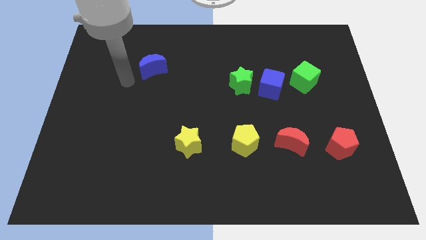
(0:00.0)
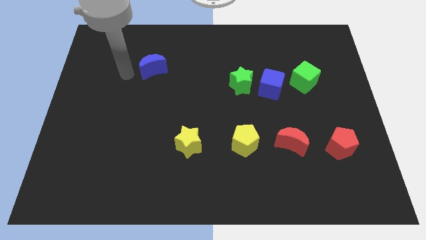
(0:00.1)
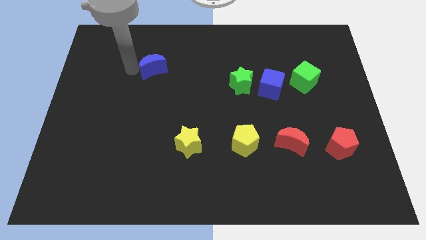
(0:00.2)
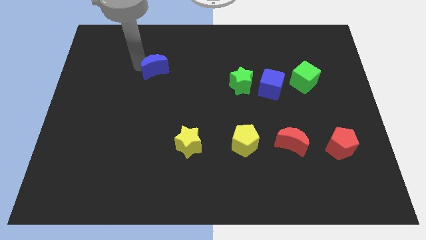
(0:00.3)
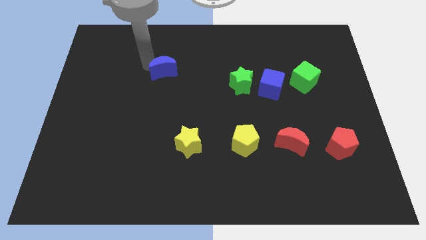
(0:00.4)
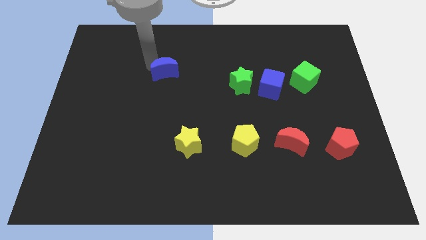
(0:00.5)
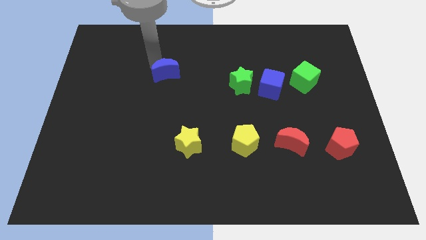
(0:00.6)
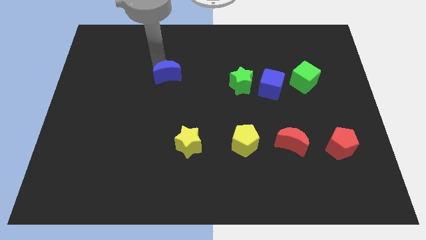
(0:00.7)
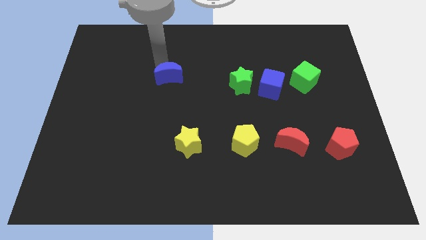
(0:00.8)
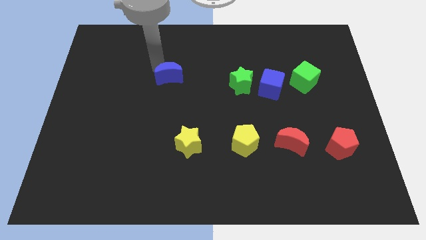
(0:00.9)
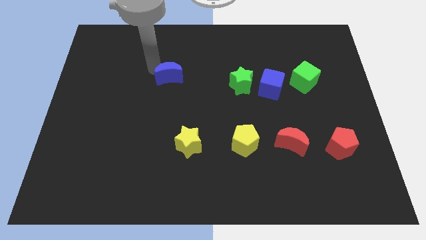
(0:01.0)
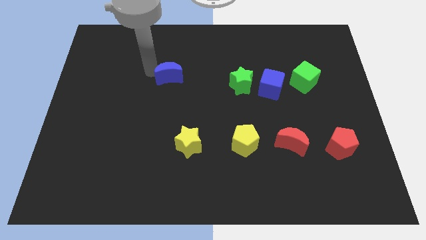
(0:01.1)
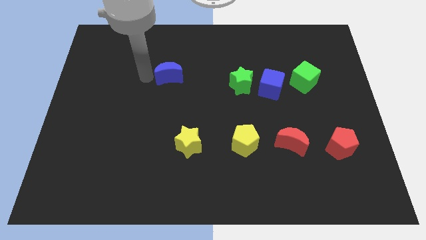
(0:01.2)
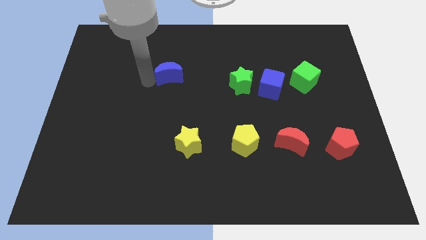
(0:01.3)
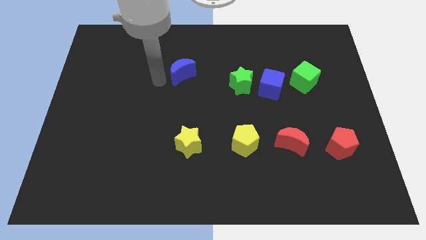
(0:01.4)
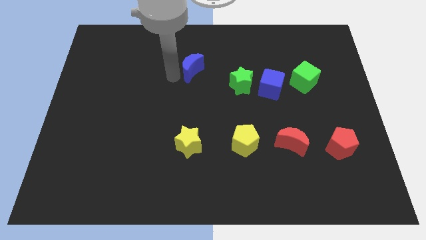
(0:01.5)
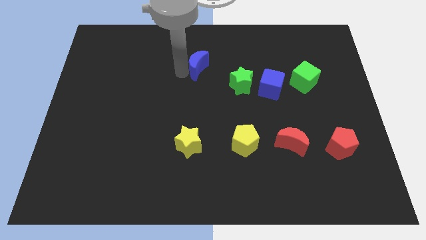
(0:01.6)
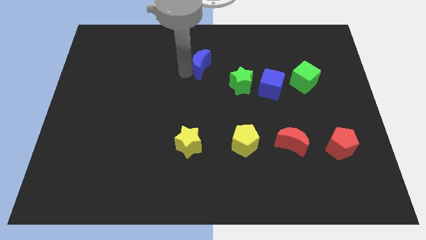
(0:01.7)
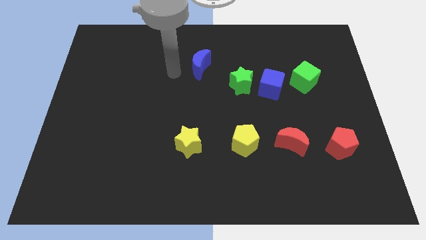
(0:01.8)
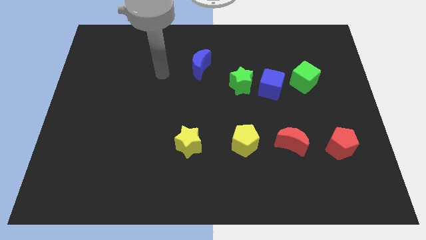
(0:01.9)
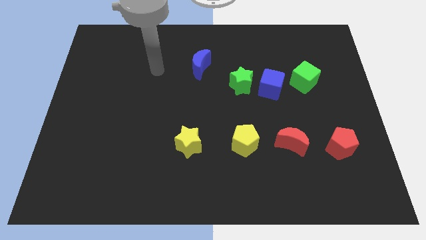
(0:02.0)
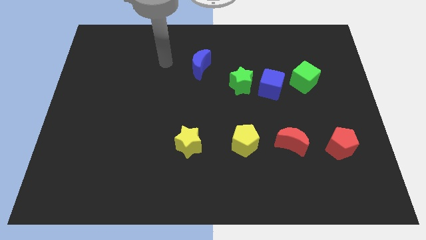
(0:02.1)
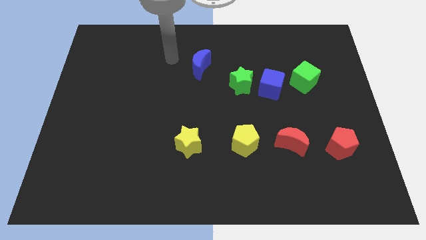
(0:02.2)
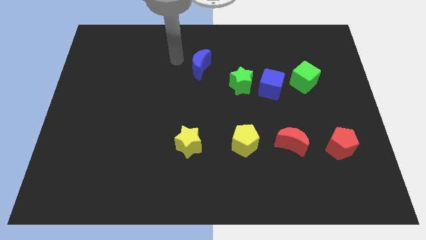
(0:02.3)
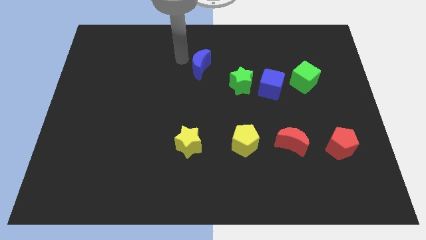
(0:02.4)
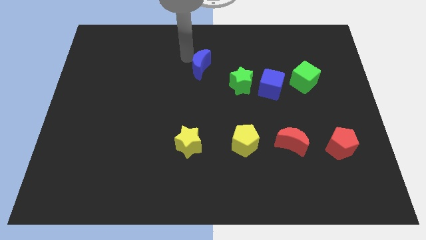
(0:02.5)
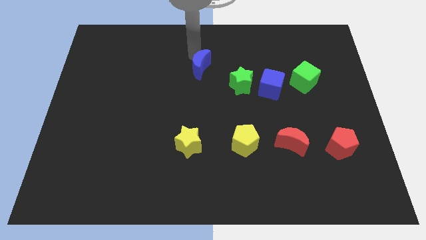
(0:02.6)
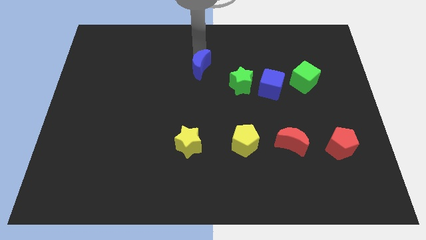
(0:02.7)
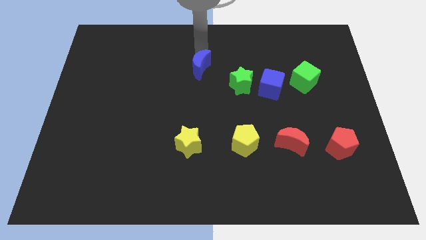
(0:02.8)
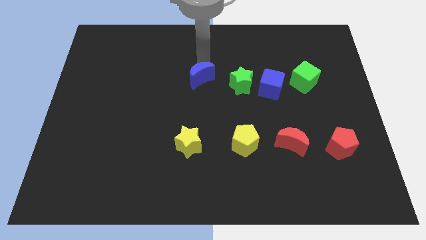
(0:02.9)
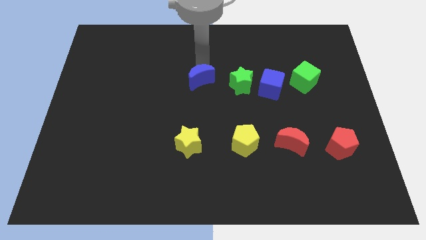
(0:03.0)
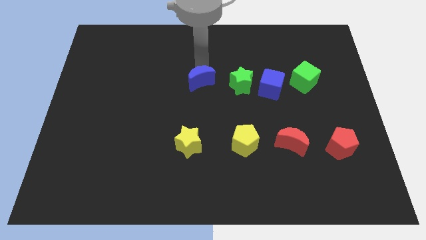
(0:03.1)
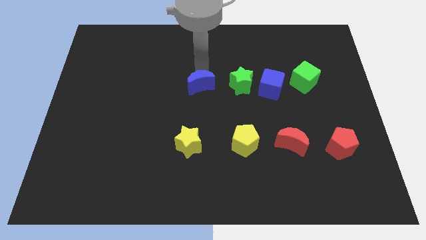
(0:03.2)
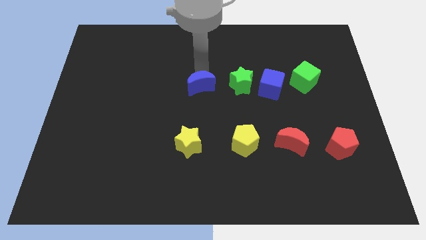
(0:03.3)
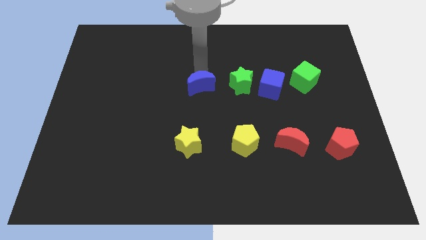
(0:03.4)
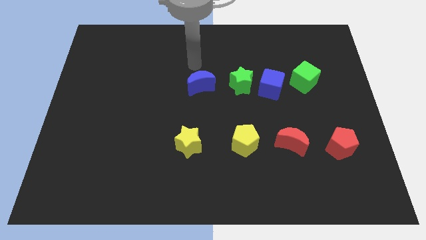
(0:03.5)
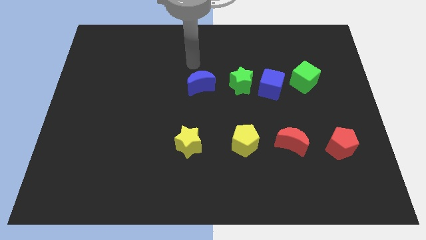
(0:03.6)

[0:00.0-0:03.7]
move the blue crescent to the left of the green star

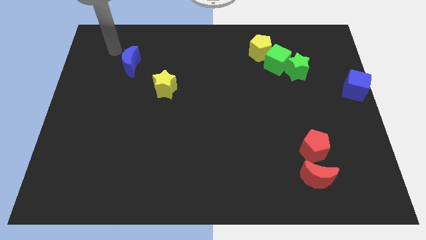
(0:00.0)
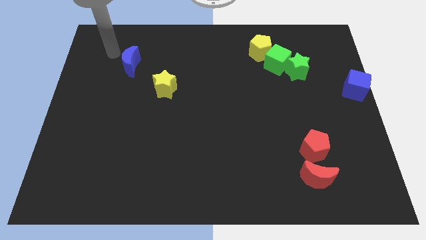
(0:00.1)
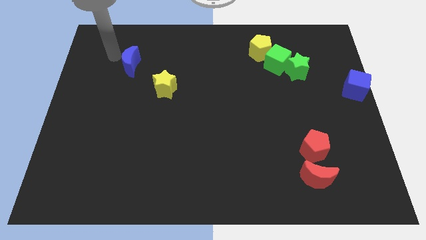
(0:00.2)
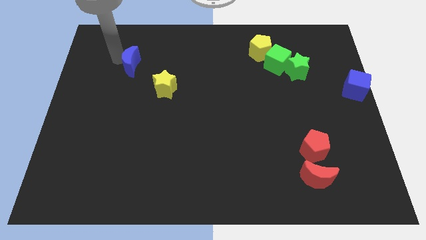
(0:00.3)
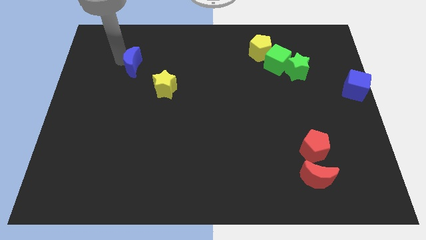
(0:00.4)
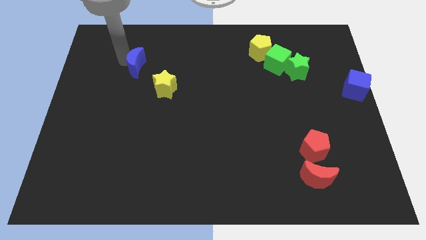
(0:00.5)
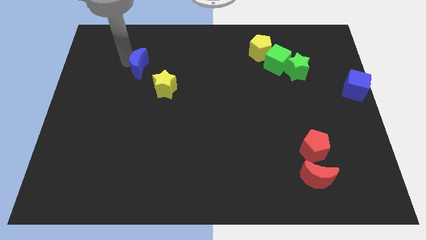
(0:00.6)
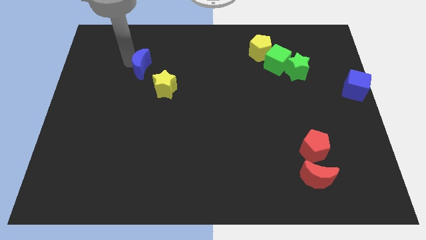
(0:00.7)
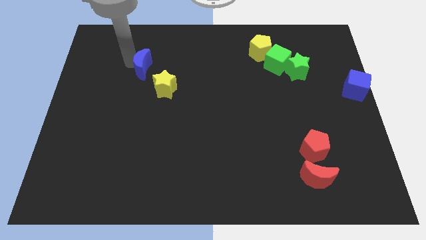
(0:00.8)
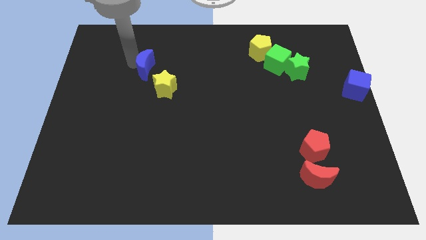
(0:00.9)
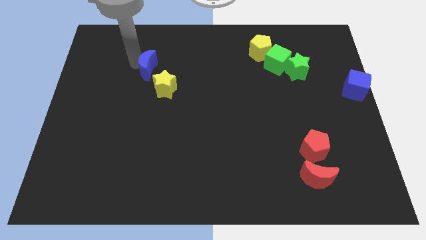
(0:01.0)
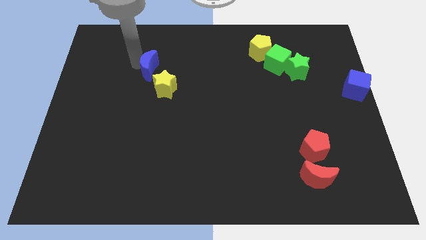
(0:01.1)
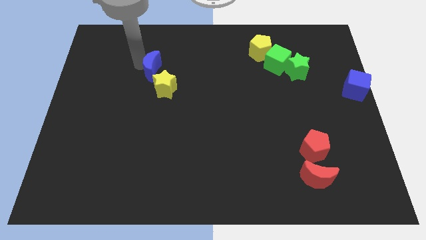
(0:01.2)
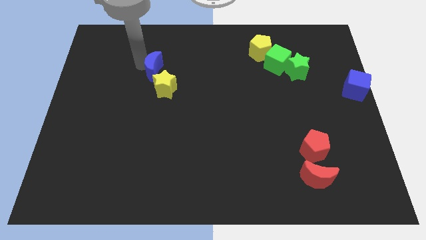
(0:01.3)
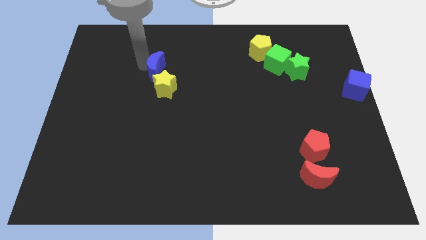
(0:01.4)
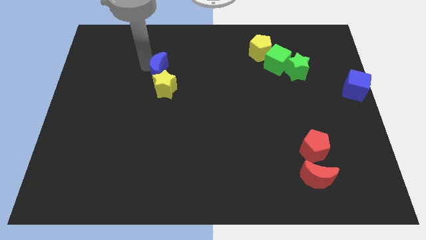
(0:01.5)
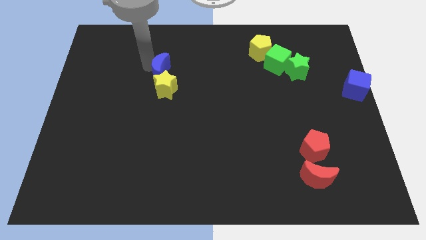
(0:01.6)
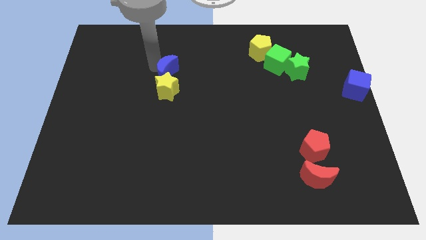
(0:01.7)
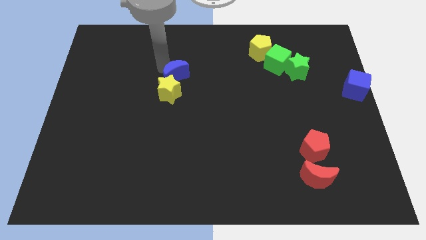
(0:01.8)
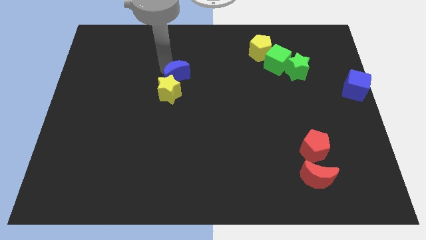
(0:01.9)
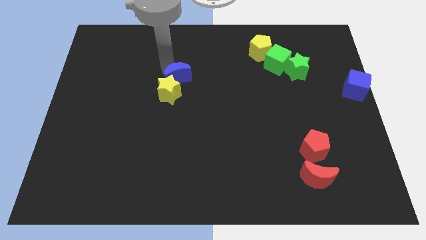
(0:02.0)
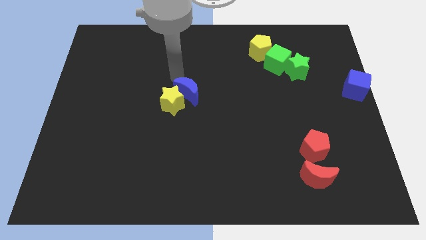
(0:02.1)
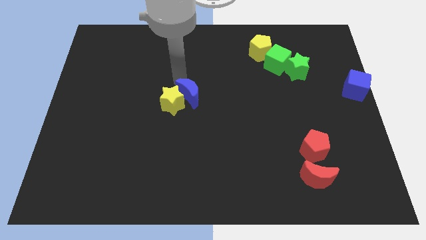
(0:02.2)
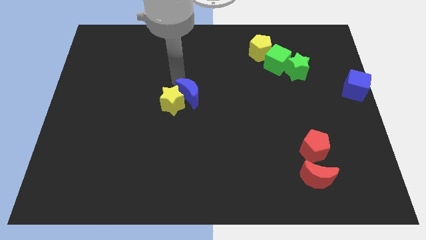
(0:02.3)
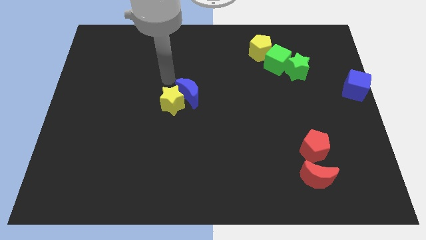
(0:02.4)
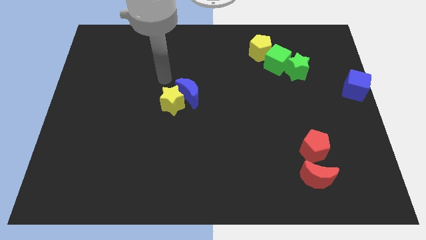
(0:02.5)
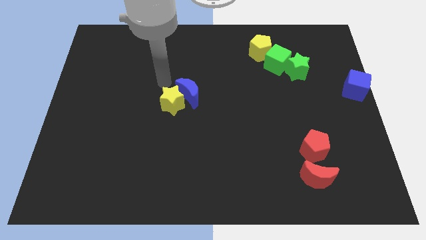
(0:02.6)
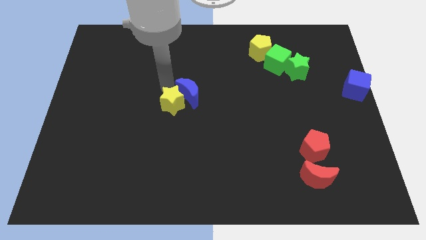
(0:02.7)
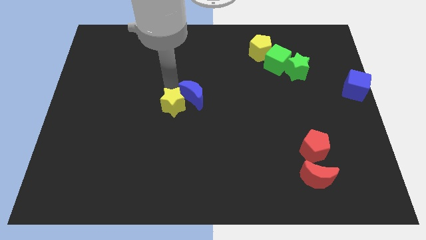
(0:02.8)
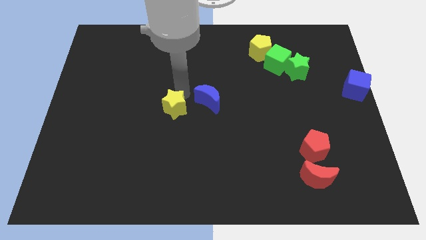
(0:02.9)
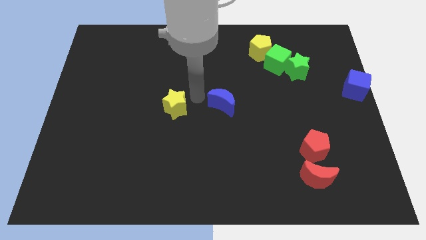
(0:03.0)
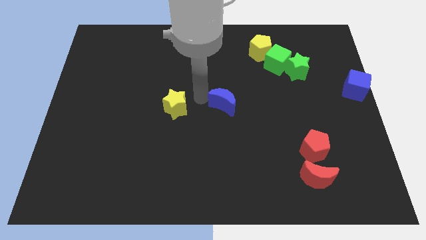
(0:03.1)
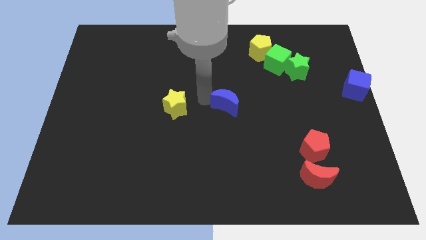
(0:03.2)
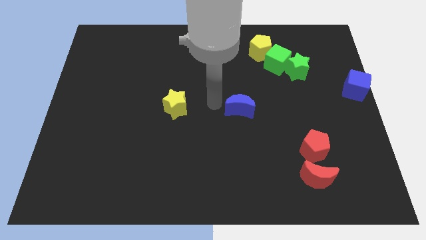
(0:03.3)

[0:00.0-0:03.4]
push the blue crescent towards the center of the board

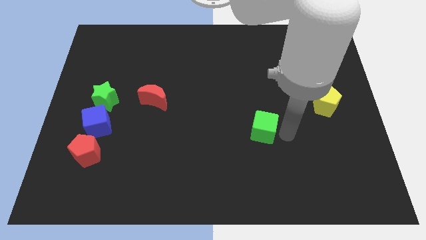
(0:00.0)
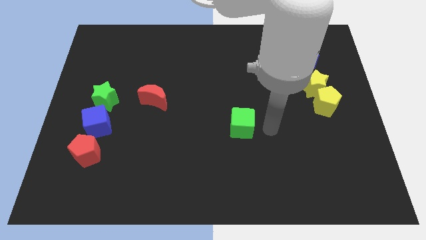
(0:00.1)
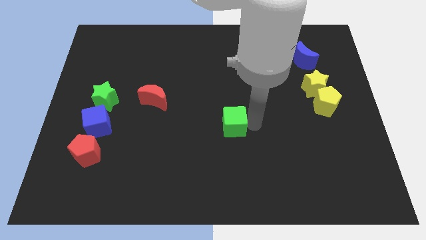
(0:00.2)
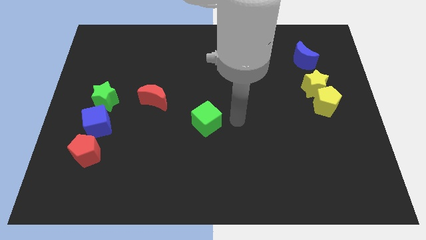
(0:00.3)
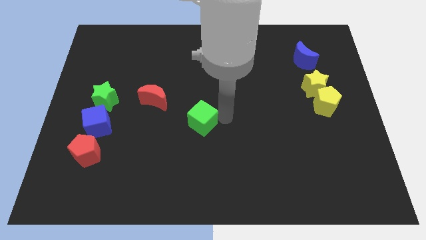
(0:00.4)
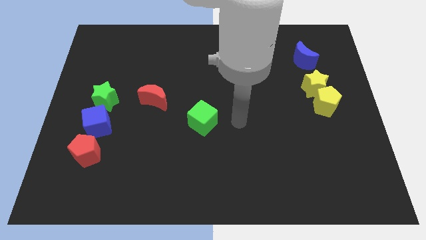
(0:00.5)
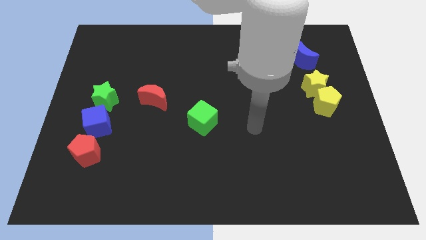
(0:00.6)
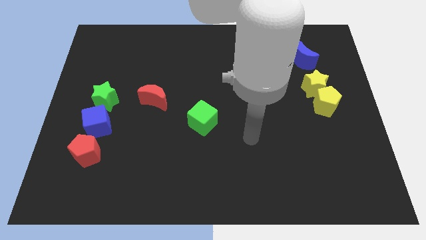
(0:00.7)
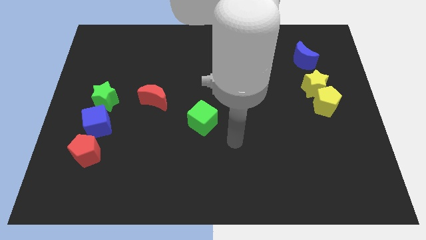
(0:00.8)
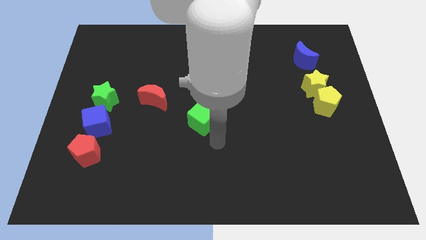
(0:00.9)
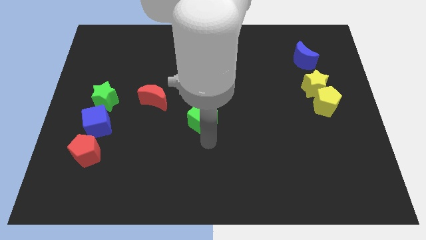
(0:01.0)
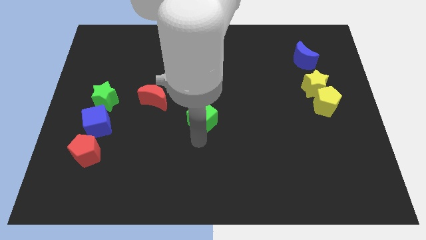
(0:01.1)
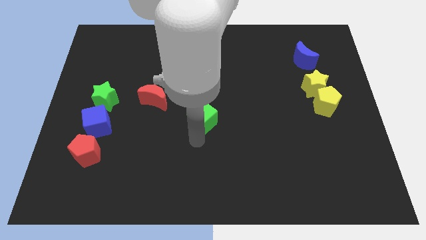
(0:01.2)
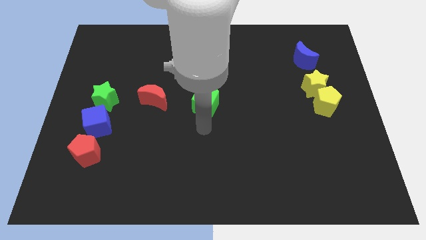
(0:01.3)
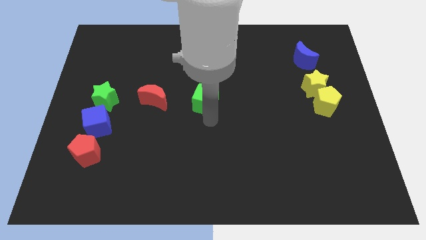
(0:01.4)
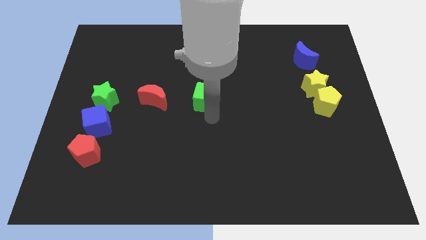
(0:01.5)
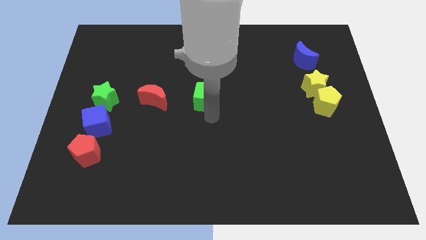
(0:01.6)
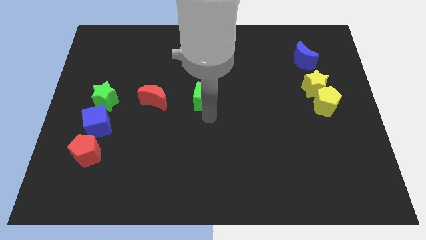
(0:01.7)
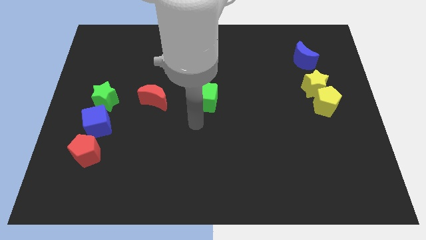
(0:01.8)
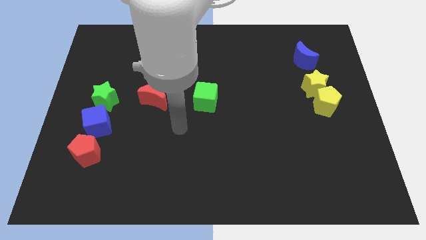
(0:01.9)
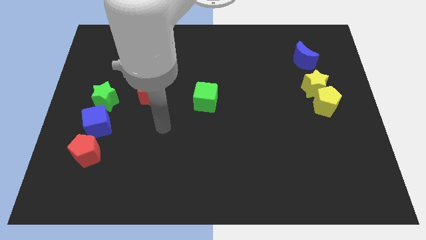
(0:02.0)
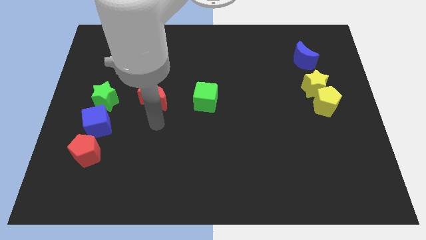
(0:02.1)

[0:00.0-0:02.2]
push green cube to the right of red moon
